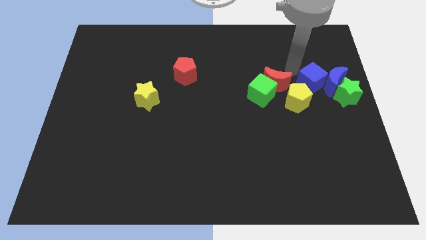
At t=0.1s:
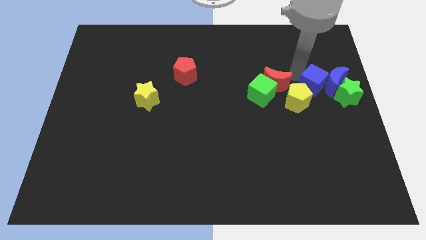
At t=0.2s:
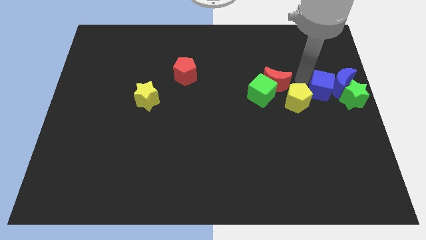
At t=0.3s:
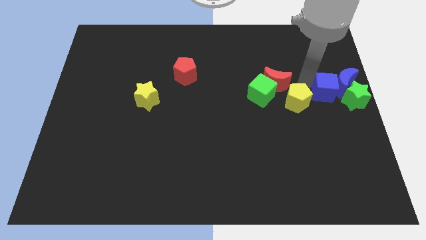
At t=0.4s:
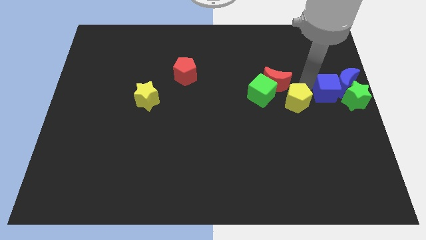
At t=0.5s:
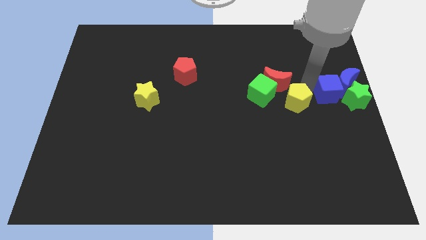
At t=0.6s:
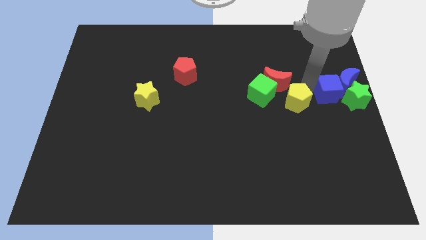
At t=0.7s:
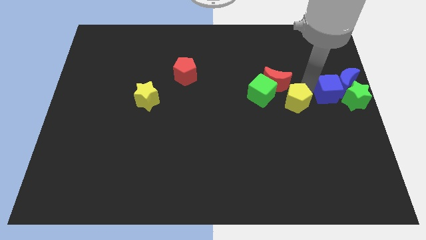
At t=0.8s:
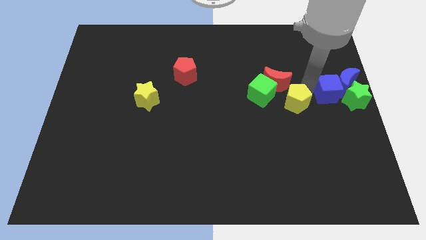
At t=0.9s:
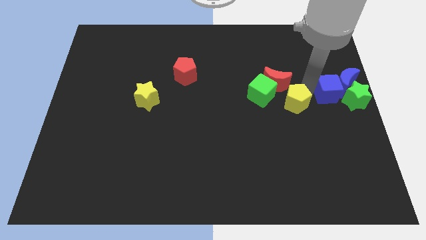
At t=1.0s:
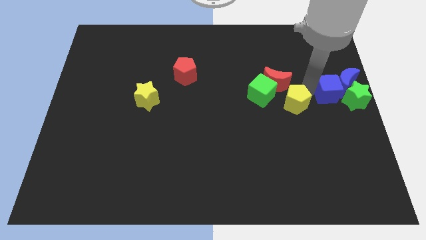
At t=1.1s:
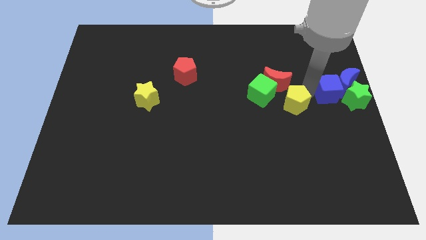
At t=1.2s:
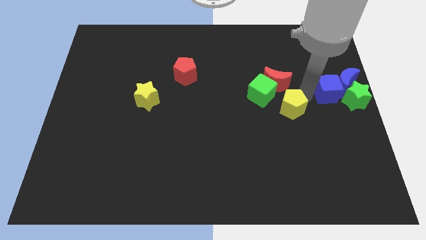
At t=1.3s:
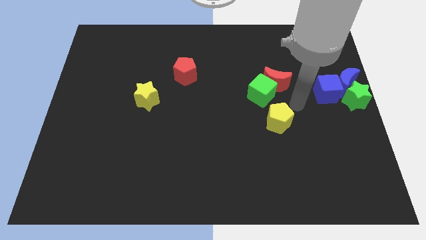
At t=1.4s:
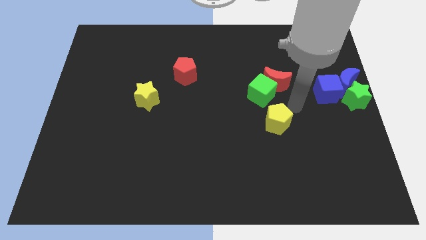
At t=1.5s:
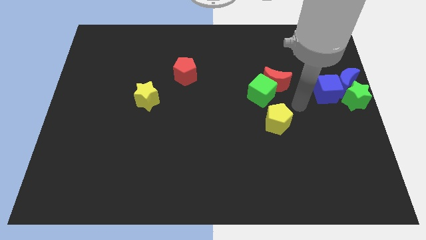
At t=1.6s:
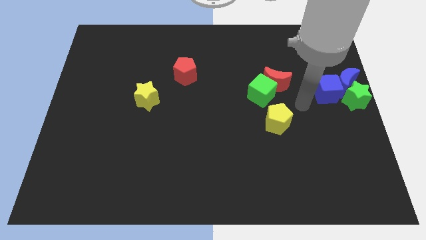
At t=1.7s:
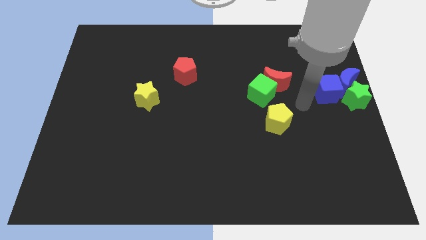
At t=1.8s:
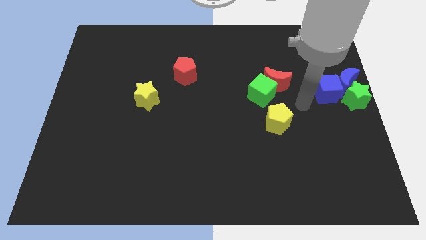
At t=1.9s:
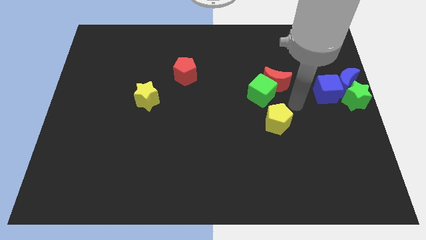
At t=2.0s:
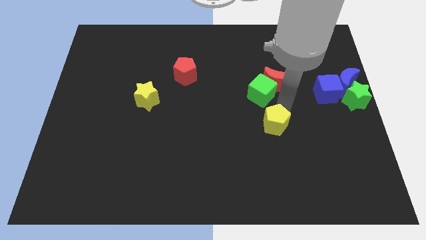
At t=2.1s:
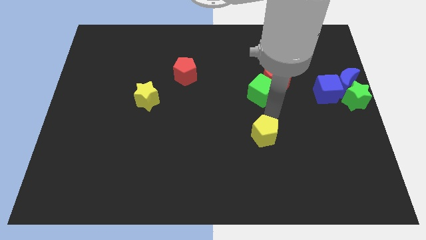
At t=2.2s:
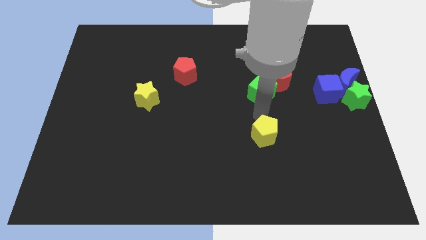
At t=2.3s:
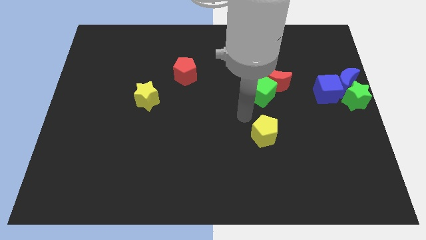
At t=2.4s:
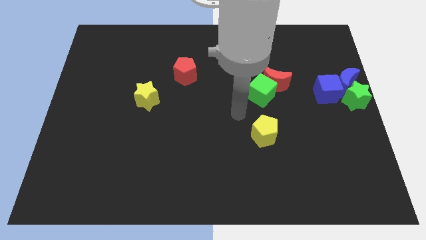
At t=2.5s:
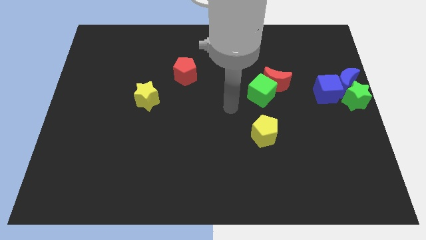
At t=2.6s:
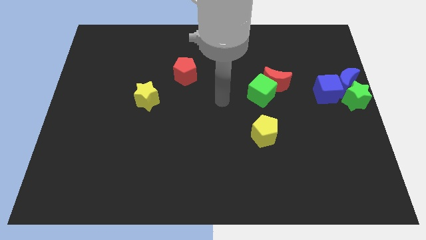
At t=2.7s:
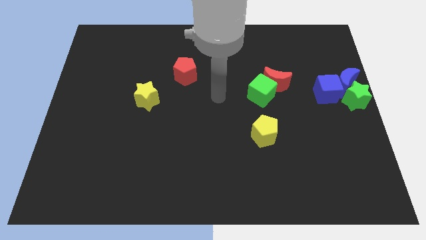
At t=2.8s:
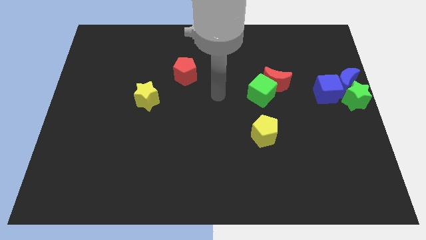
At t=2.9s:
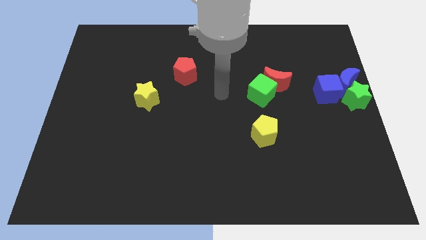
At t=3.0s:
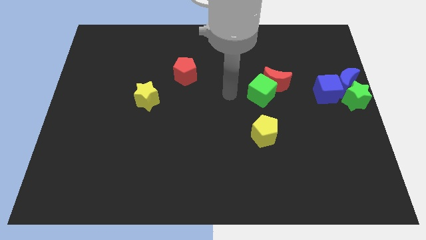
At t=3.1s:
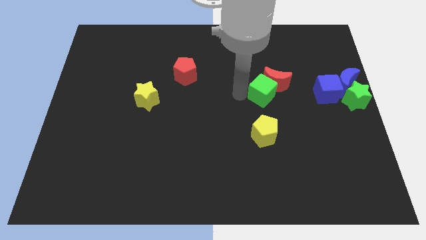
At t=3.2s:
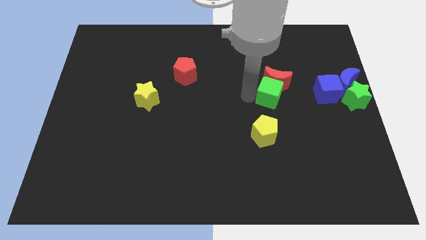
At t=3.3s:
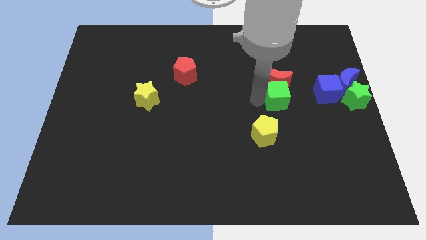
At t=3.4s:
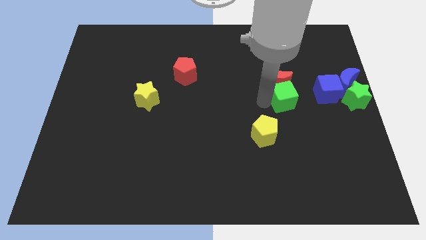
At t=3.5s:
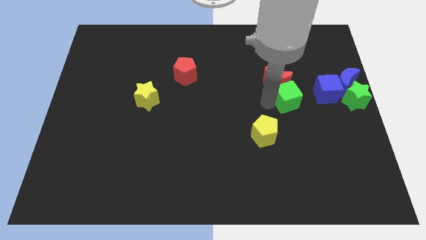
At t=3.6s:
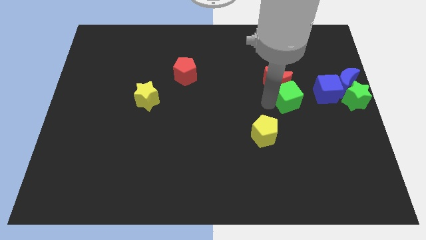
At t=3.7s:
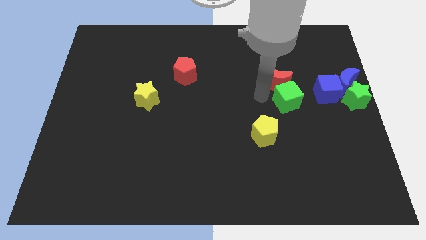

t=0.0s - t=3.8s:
push the yellow pentagon away from the blue cube

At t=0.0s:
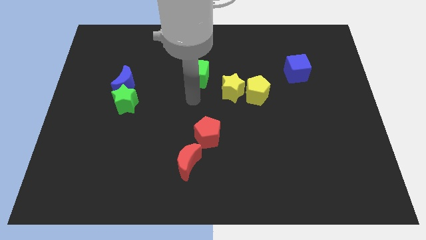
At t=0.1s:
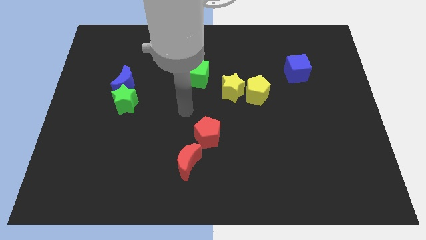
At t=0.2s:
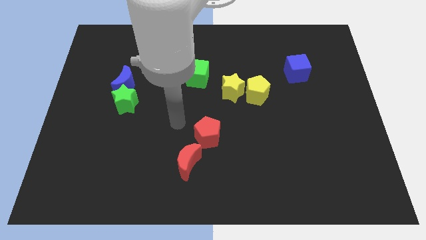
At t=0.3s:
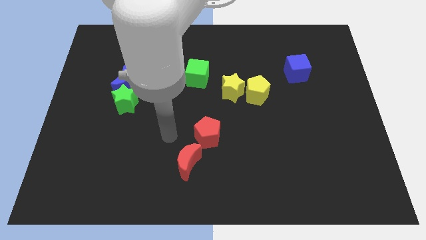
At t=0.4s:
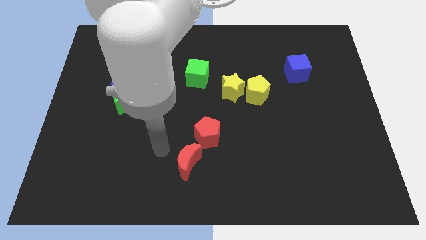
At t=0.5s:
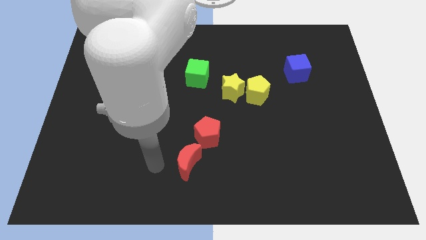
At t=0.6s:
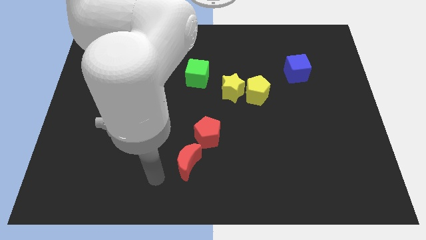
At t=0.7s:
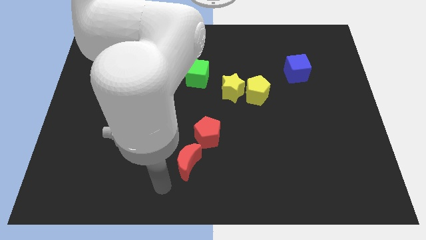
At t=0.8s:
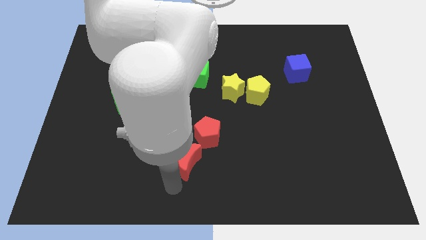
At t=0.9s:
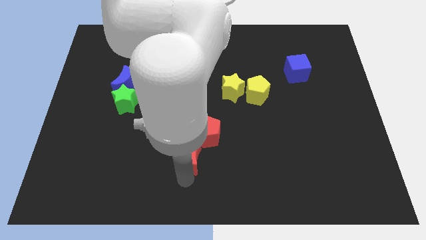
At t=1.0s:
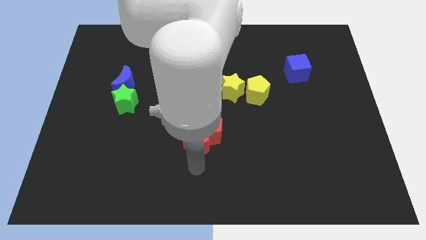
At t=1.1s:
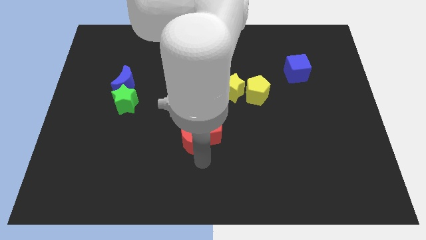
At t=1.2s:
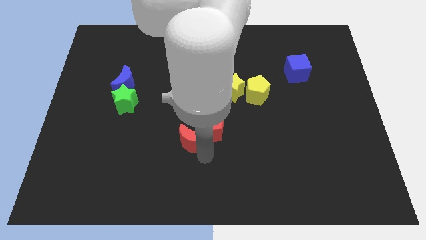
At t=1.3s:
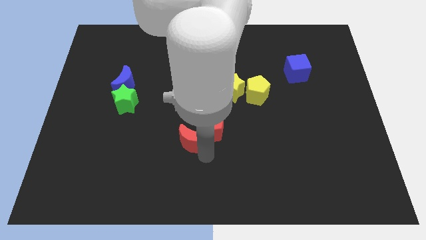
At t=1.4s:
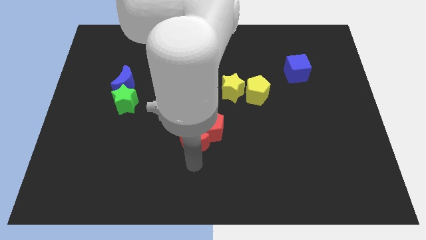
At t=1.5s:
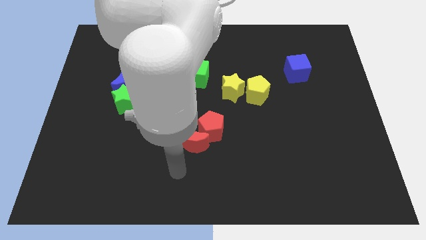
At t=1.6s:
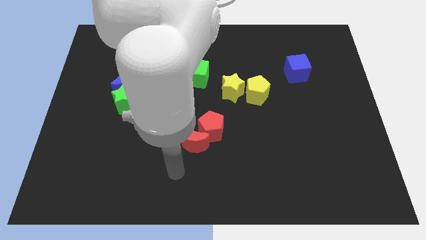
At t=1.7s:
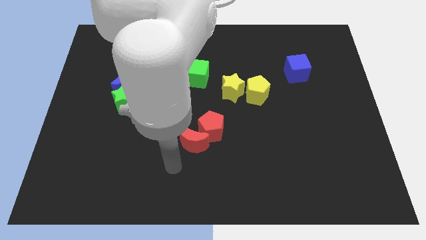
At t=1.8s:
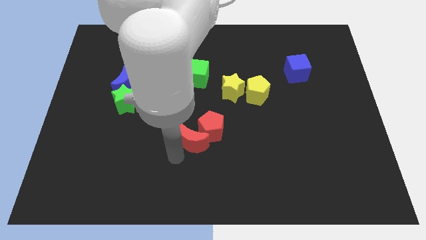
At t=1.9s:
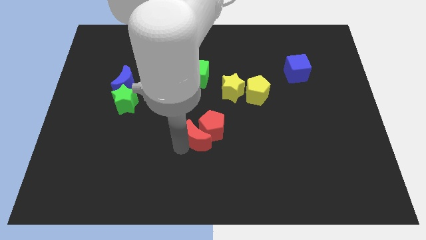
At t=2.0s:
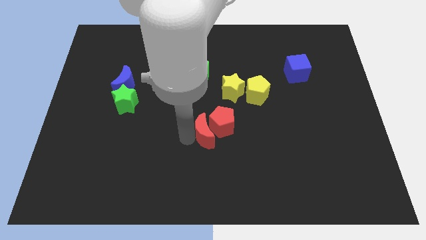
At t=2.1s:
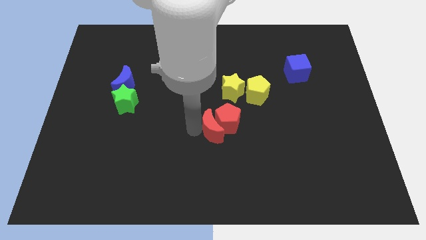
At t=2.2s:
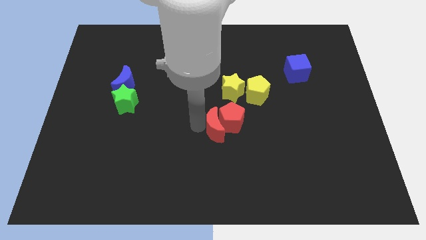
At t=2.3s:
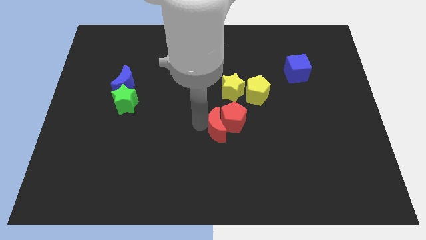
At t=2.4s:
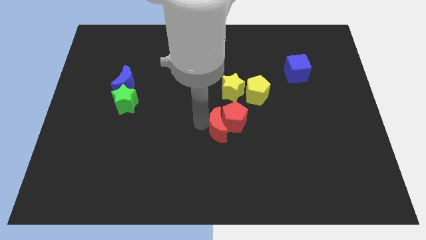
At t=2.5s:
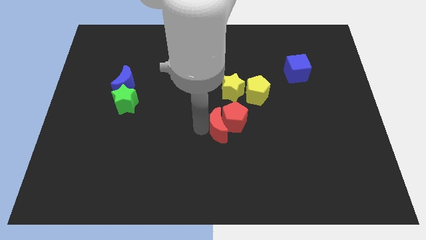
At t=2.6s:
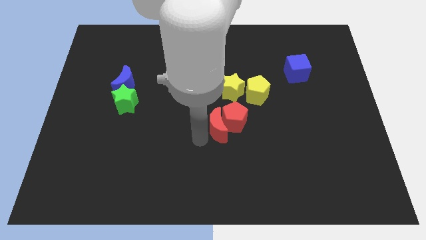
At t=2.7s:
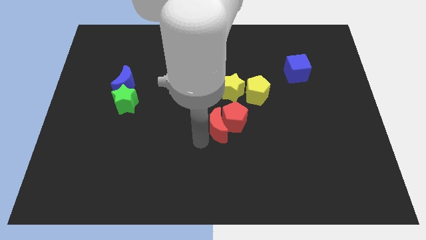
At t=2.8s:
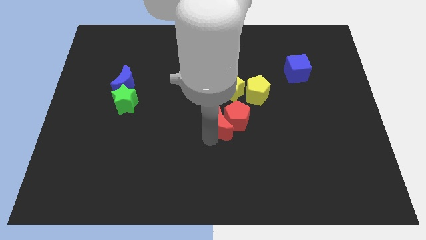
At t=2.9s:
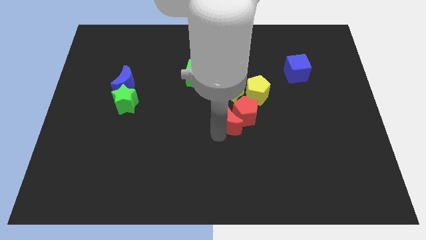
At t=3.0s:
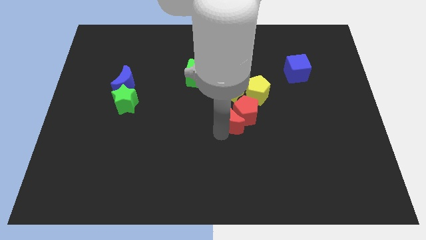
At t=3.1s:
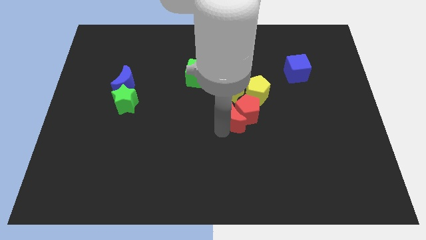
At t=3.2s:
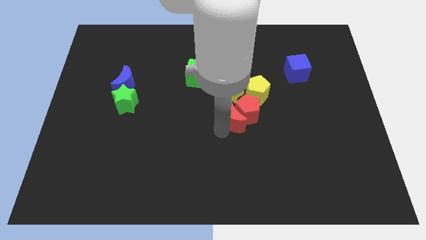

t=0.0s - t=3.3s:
push the red pentagon with red crescent towrads the yellow pentagon

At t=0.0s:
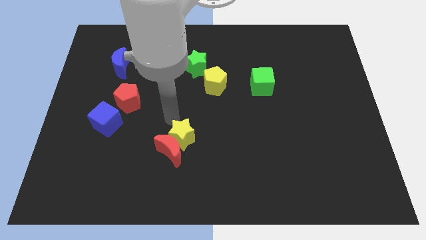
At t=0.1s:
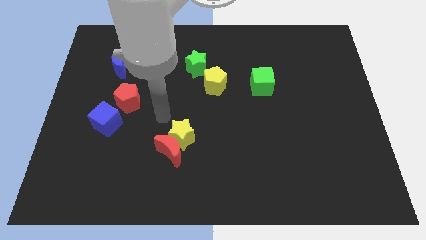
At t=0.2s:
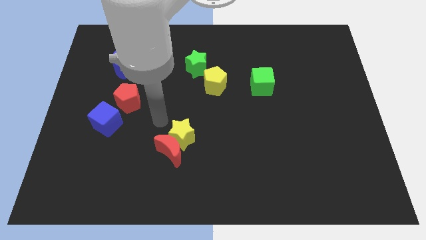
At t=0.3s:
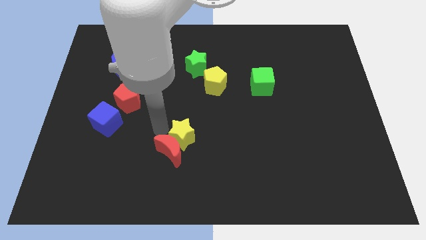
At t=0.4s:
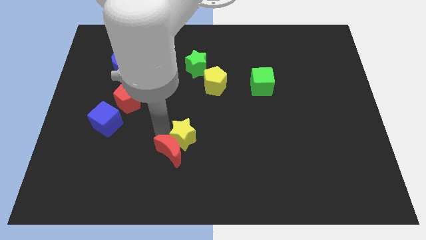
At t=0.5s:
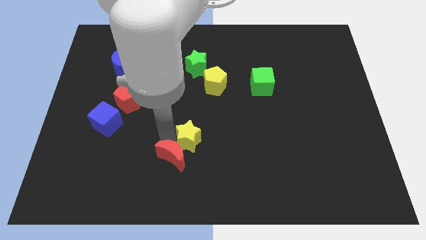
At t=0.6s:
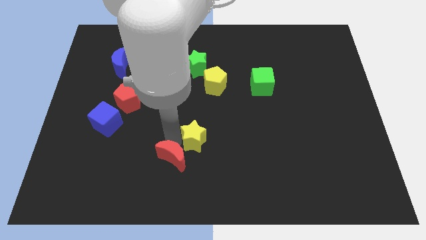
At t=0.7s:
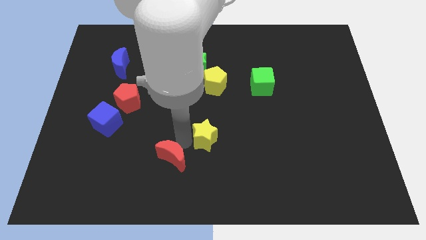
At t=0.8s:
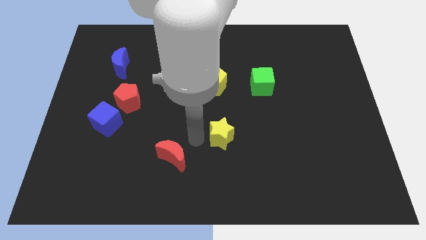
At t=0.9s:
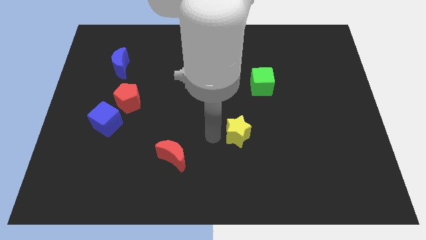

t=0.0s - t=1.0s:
separate the yellow star from the red crescent

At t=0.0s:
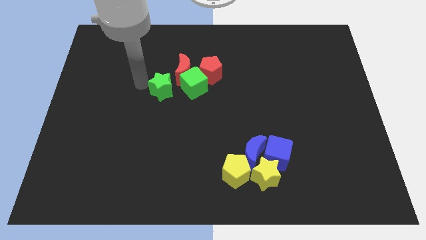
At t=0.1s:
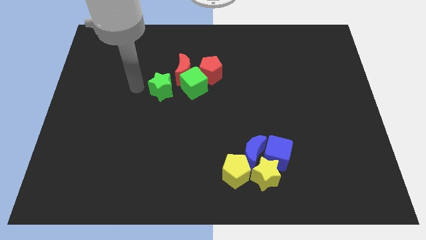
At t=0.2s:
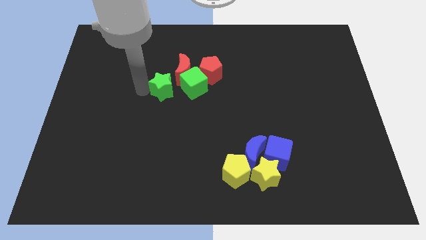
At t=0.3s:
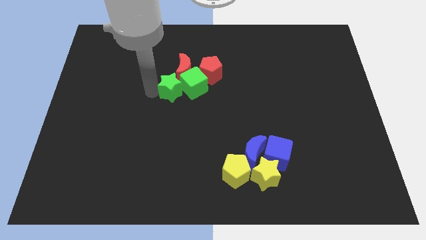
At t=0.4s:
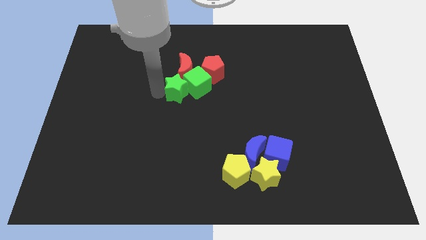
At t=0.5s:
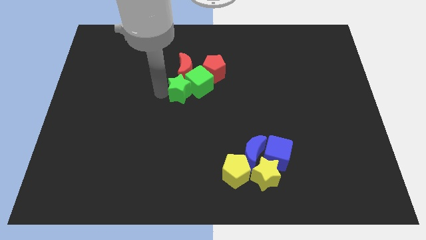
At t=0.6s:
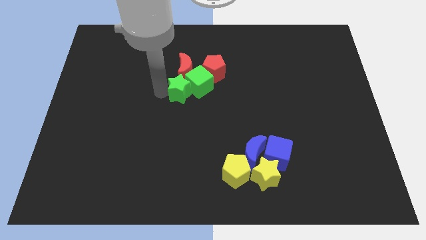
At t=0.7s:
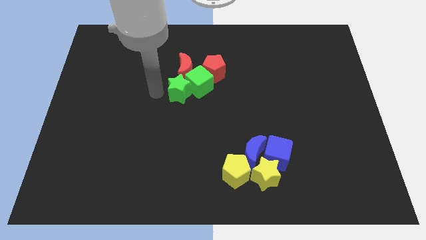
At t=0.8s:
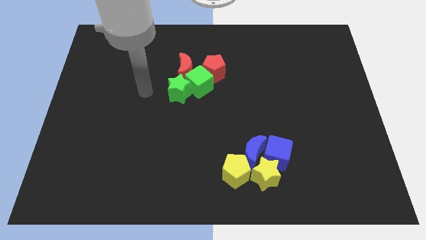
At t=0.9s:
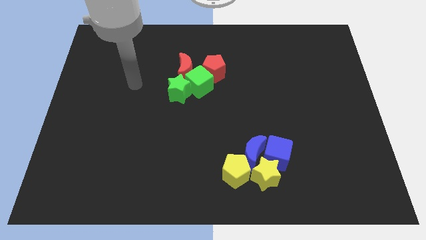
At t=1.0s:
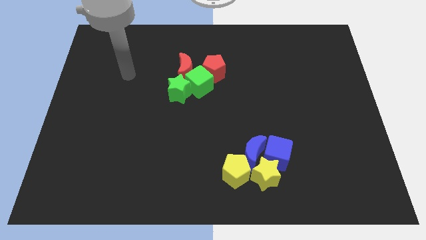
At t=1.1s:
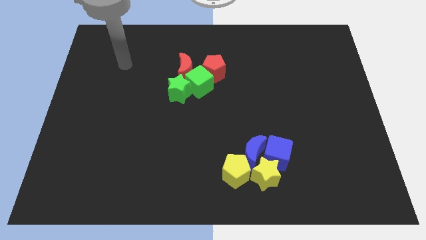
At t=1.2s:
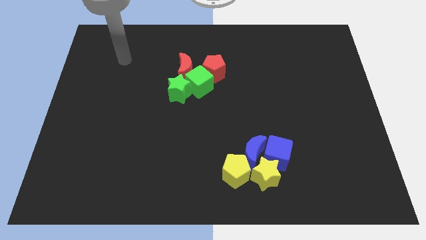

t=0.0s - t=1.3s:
push the green star to the bottom of the red moon
